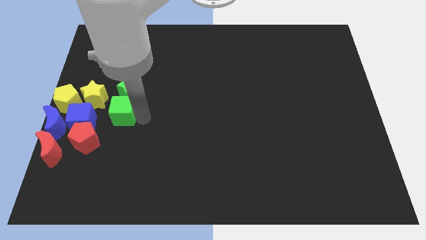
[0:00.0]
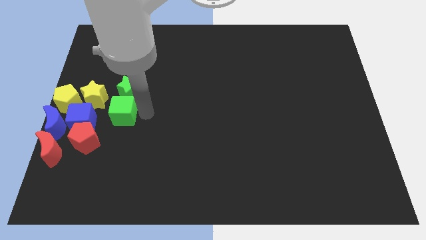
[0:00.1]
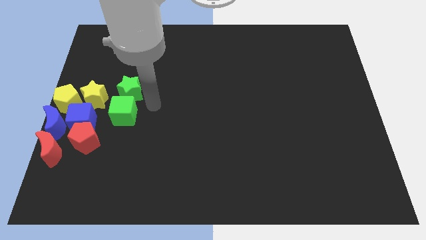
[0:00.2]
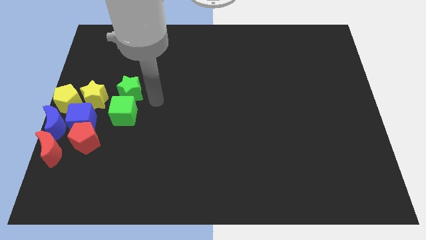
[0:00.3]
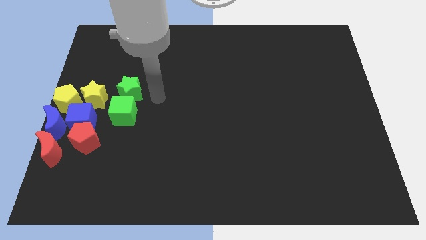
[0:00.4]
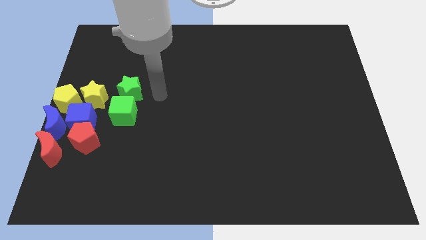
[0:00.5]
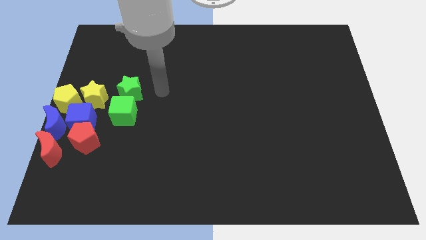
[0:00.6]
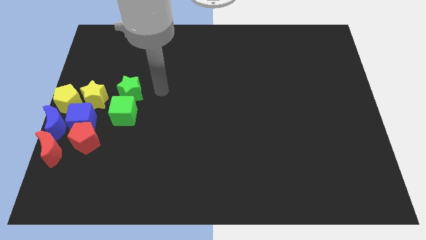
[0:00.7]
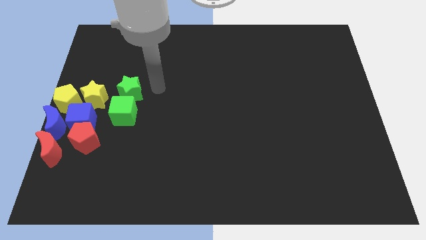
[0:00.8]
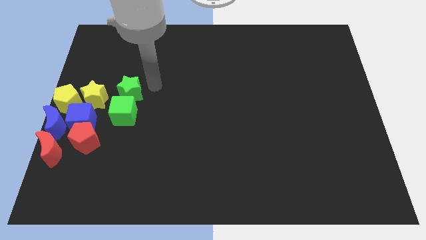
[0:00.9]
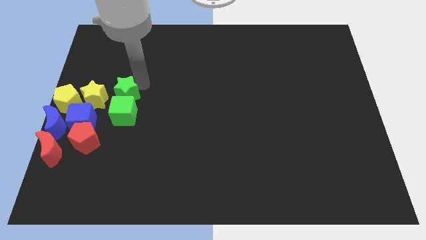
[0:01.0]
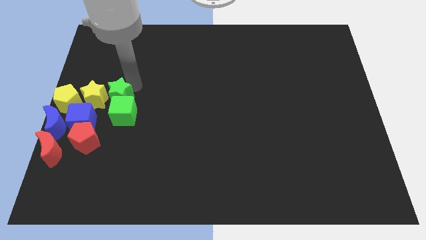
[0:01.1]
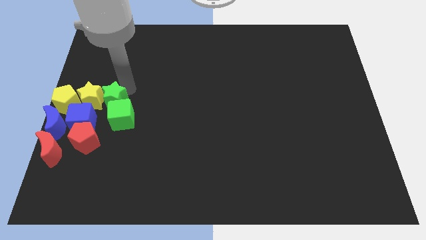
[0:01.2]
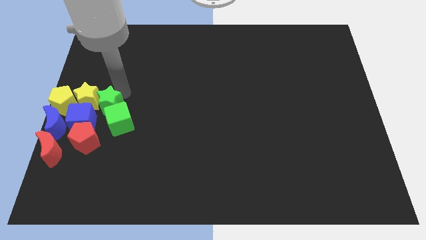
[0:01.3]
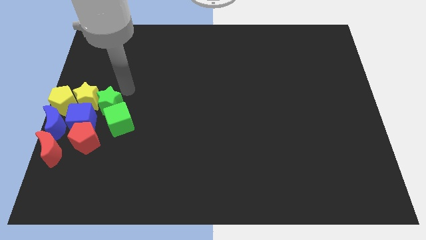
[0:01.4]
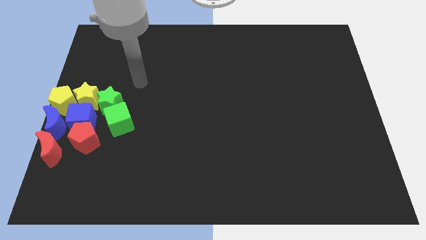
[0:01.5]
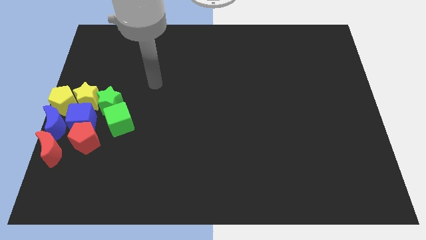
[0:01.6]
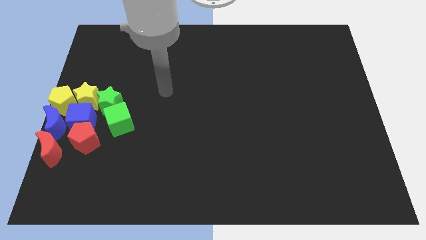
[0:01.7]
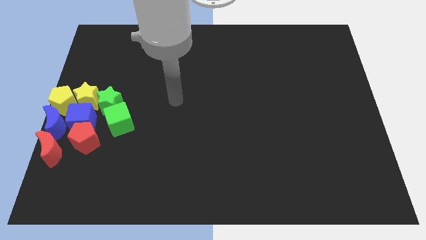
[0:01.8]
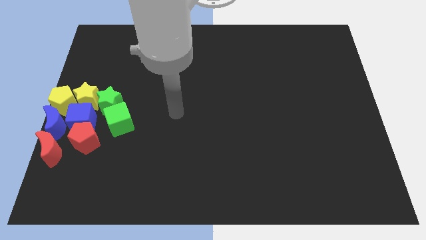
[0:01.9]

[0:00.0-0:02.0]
move the green star into the right side of the yellow star

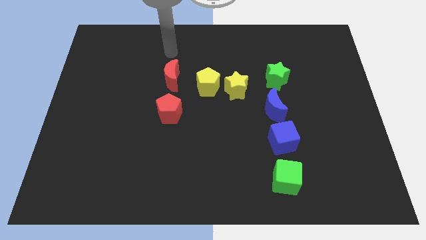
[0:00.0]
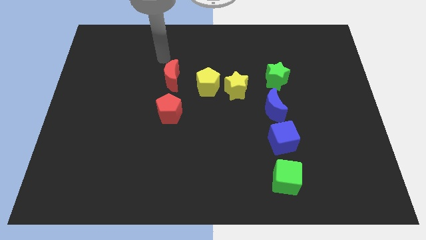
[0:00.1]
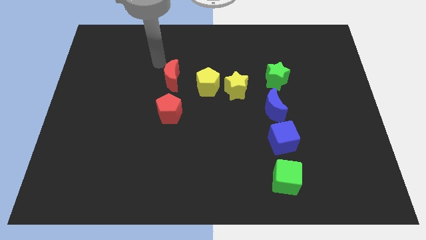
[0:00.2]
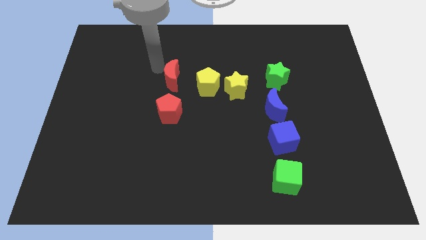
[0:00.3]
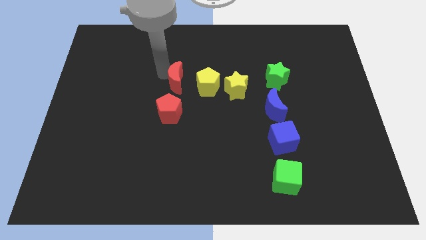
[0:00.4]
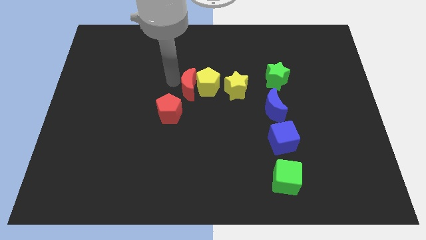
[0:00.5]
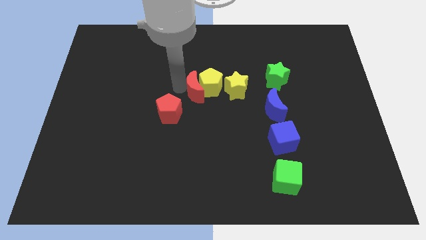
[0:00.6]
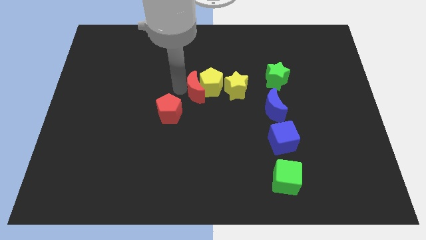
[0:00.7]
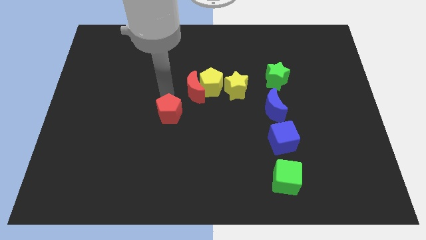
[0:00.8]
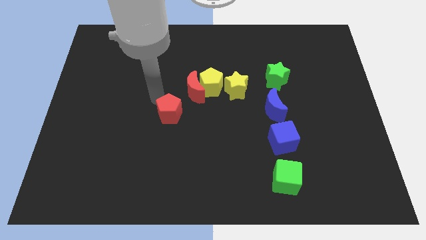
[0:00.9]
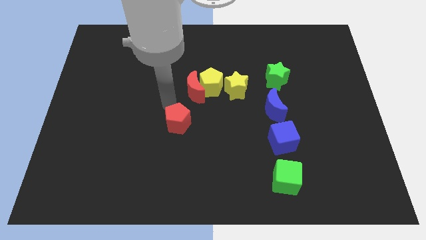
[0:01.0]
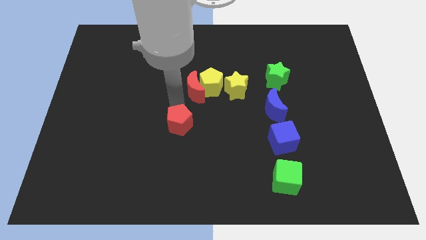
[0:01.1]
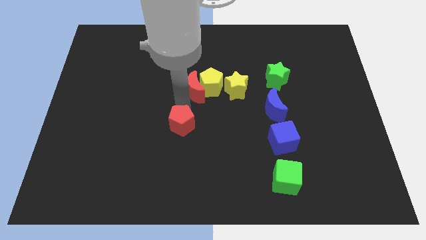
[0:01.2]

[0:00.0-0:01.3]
push the red moon into the yellow pentagon

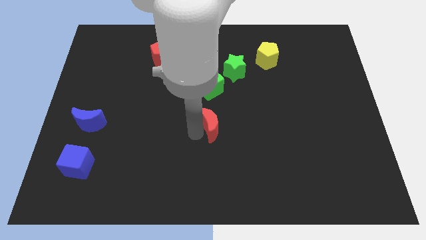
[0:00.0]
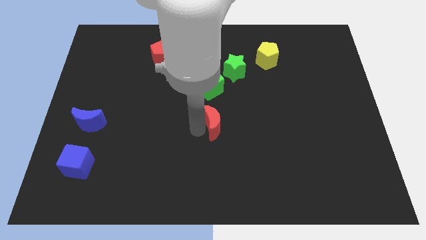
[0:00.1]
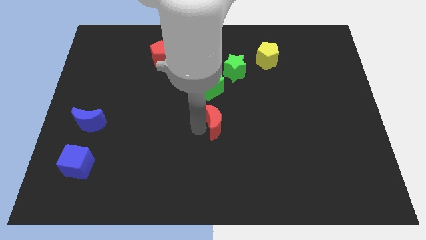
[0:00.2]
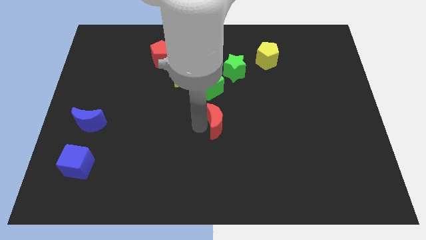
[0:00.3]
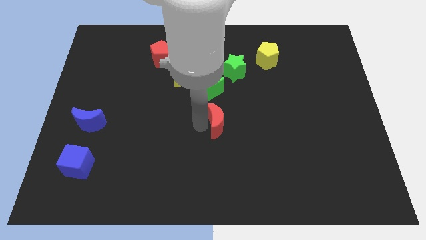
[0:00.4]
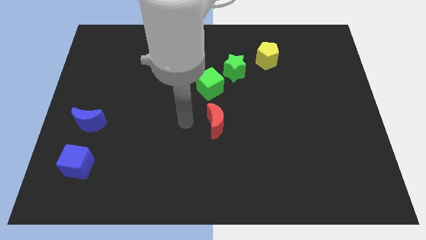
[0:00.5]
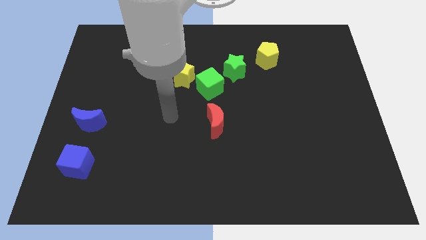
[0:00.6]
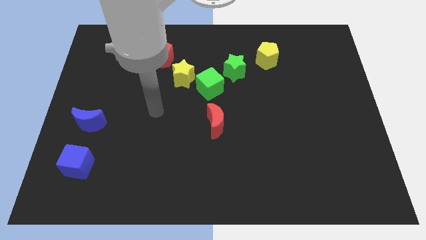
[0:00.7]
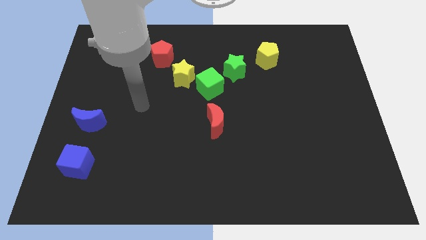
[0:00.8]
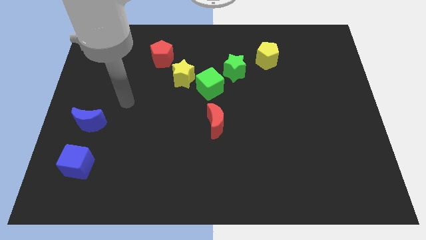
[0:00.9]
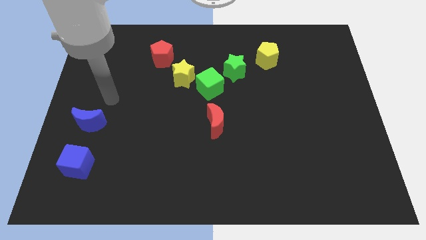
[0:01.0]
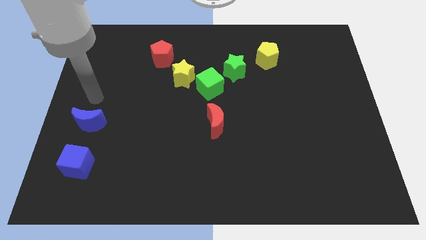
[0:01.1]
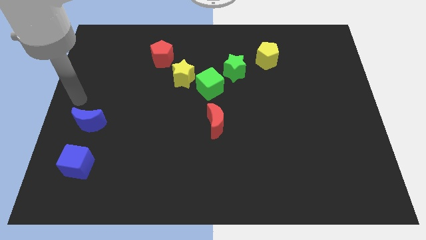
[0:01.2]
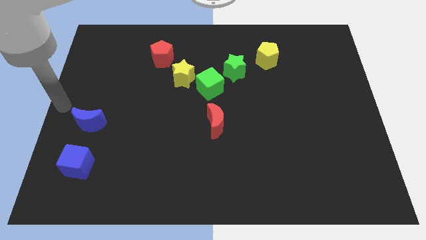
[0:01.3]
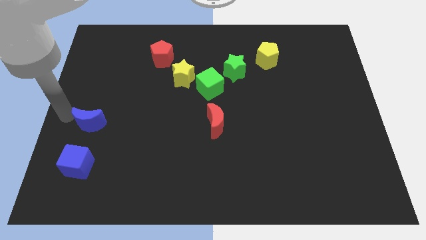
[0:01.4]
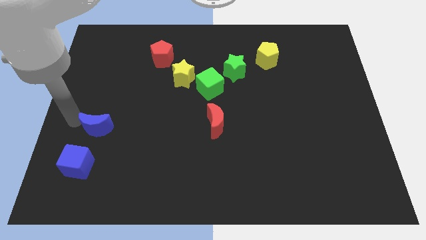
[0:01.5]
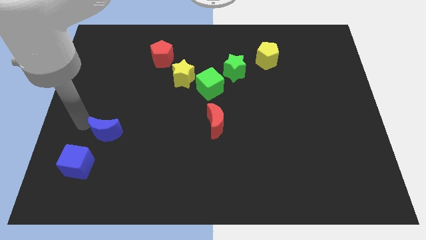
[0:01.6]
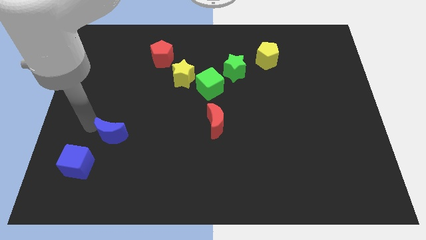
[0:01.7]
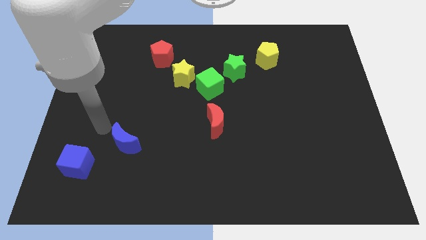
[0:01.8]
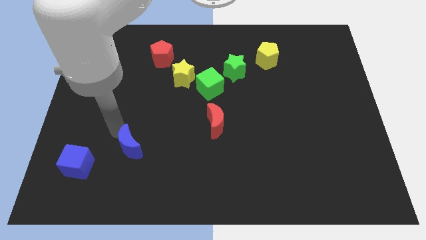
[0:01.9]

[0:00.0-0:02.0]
push the red moon to the center of the board

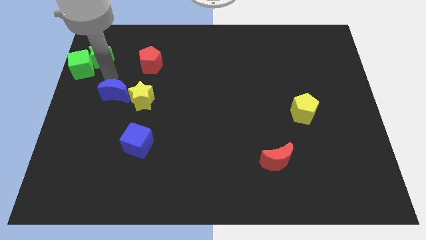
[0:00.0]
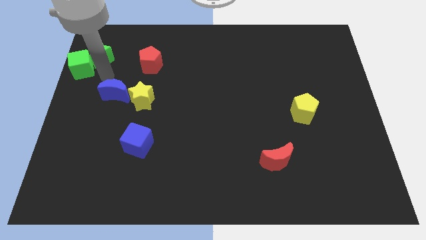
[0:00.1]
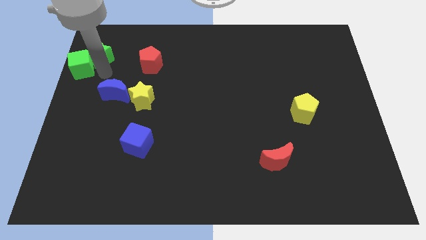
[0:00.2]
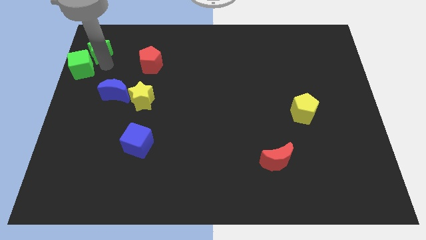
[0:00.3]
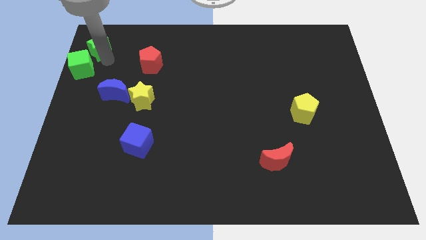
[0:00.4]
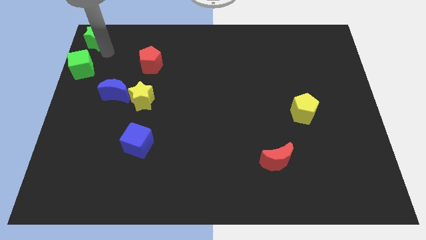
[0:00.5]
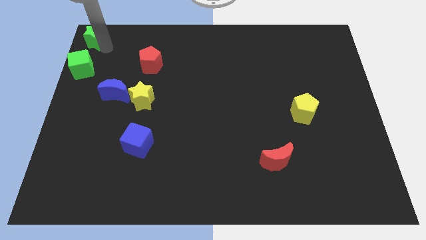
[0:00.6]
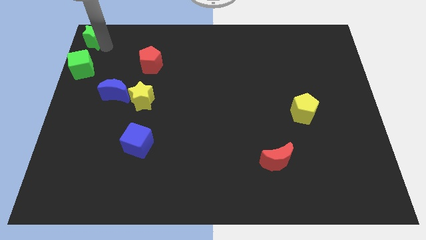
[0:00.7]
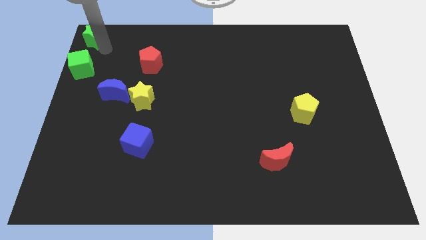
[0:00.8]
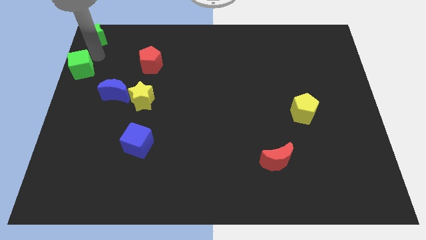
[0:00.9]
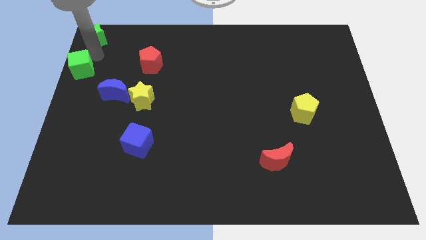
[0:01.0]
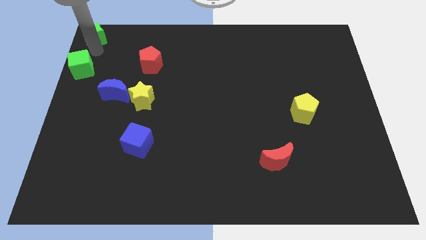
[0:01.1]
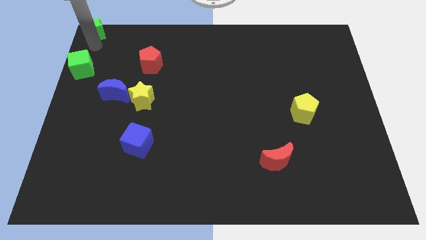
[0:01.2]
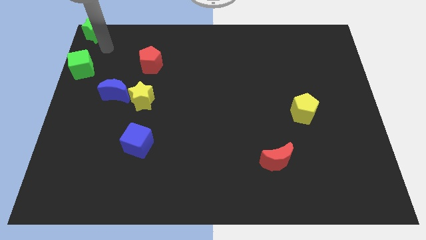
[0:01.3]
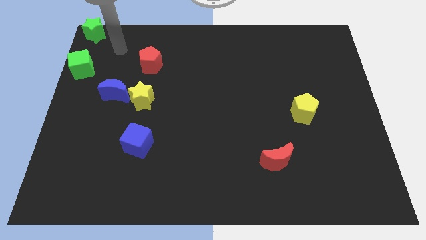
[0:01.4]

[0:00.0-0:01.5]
separate green star from the green cube

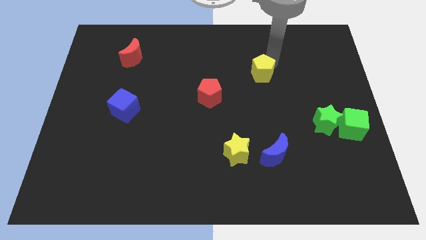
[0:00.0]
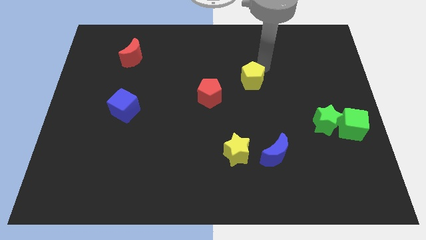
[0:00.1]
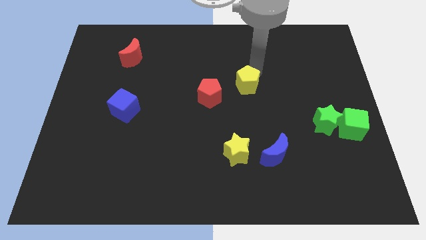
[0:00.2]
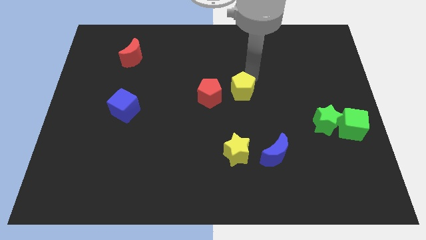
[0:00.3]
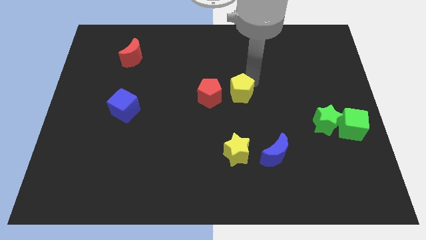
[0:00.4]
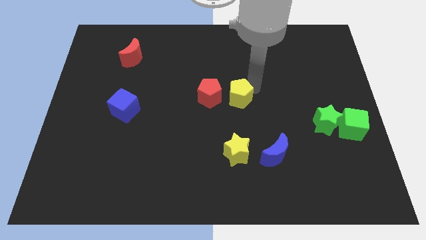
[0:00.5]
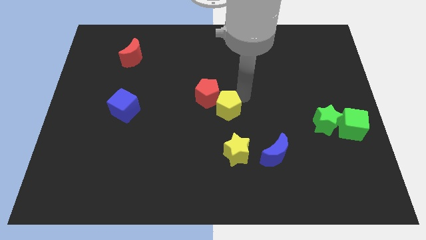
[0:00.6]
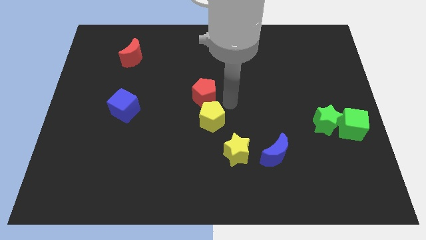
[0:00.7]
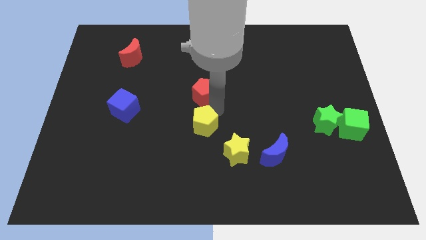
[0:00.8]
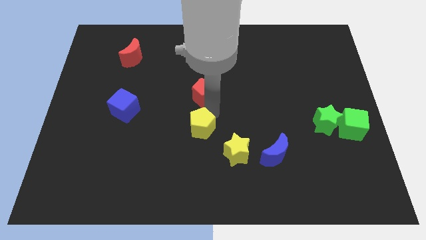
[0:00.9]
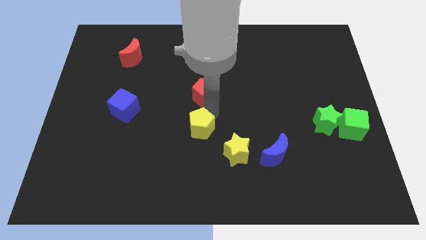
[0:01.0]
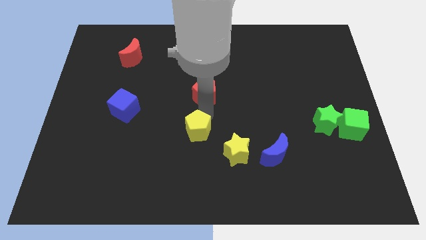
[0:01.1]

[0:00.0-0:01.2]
place the yellow pentagon below the red pentagon

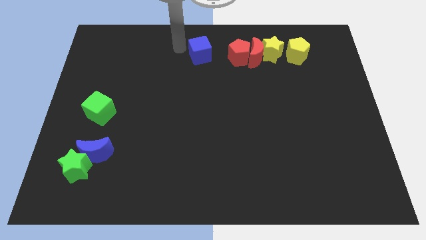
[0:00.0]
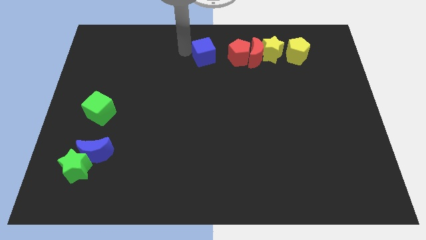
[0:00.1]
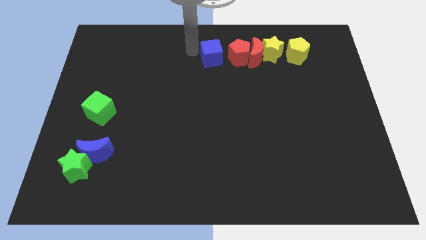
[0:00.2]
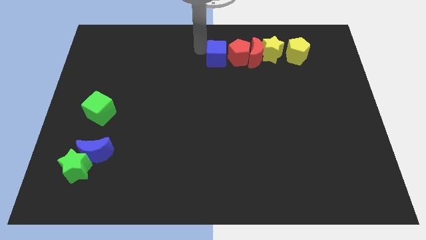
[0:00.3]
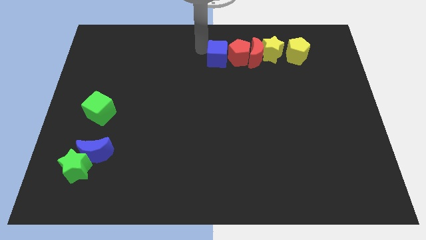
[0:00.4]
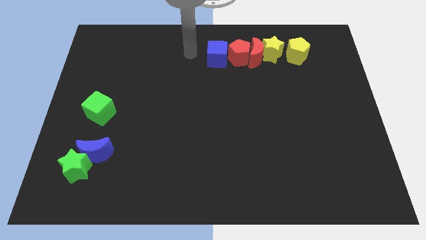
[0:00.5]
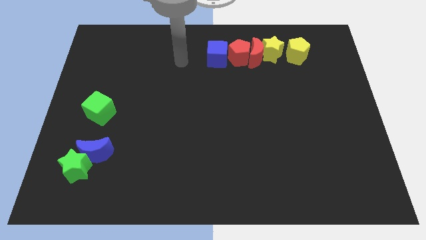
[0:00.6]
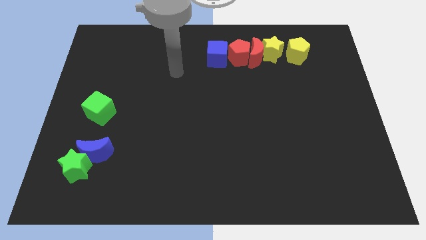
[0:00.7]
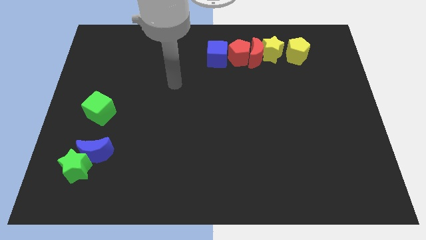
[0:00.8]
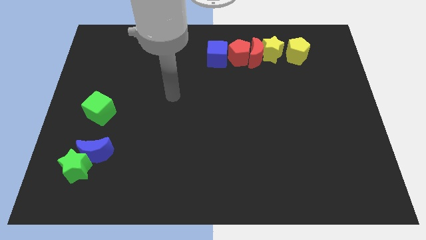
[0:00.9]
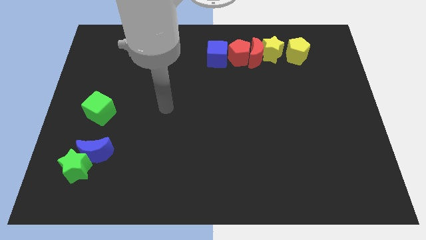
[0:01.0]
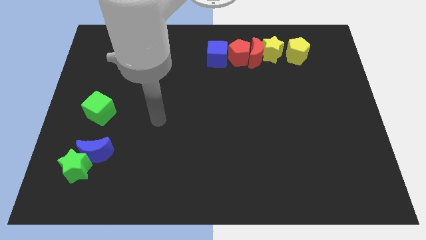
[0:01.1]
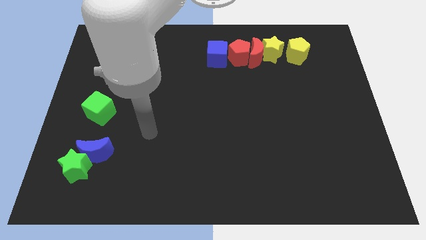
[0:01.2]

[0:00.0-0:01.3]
move the blue cube close to the red pentagon and go away
